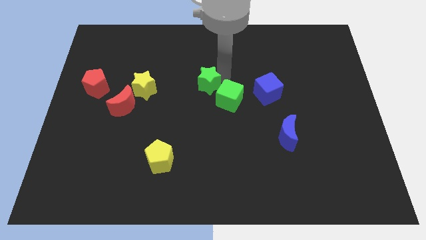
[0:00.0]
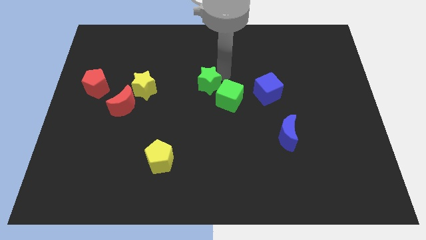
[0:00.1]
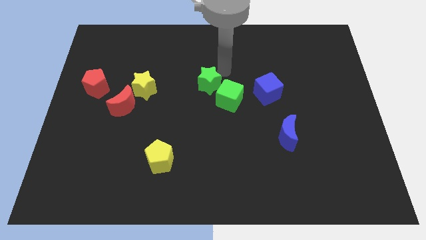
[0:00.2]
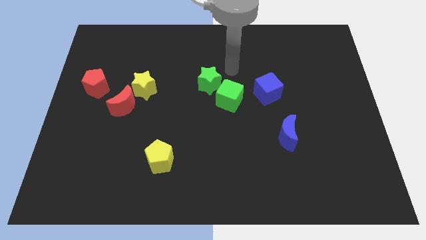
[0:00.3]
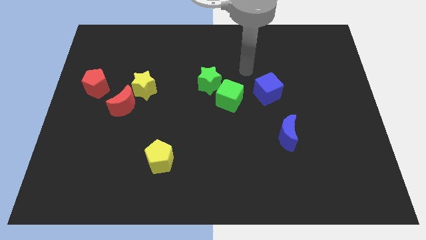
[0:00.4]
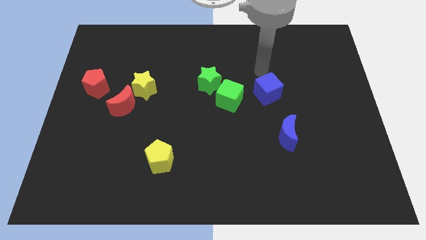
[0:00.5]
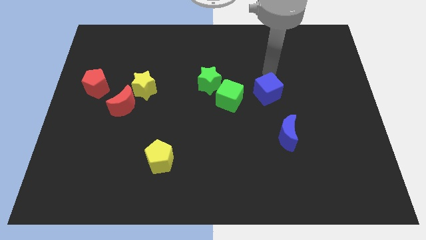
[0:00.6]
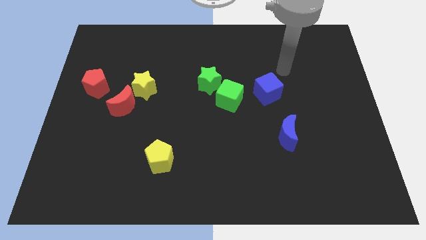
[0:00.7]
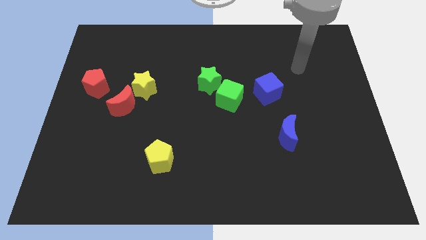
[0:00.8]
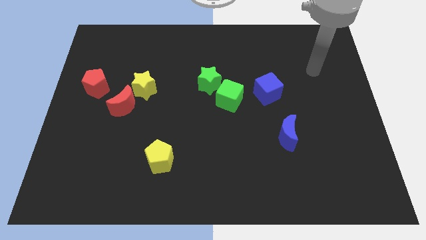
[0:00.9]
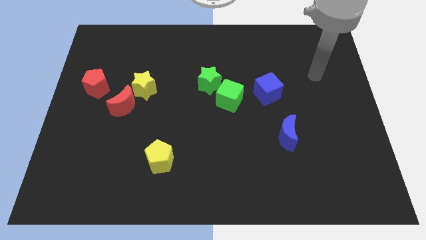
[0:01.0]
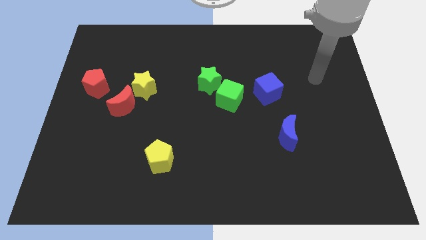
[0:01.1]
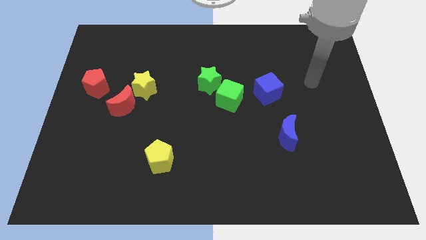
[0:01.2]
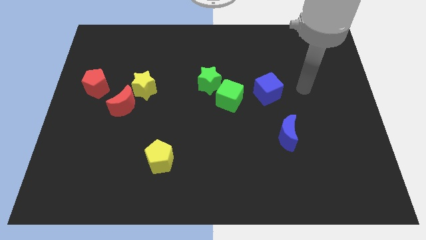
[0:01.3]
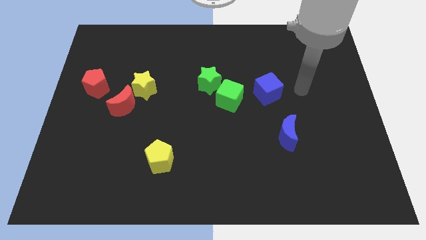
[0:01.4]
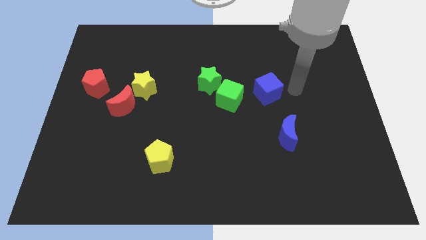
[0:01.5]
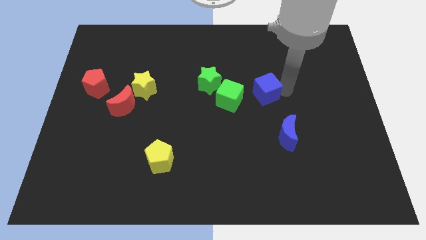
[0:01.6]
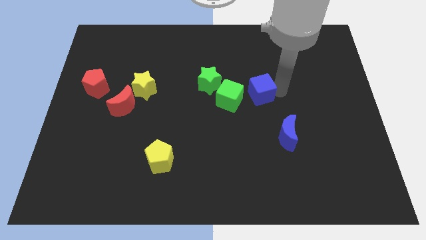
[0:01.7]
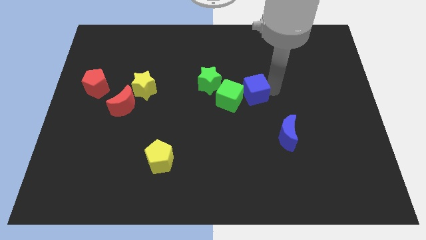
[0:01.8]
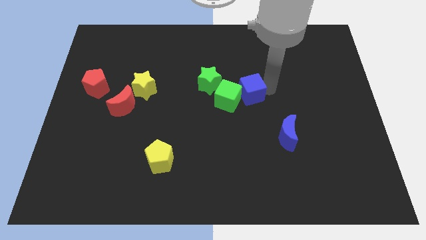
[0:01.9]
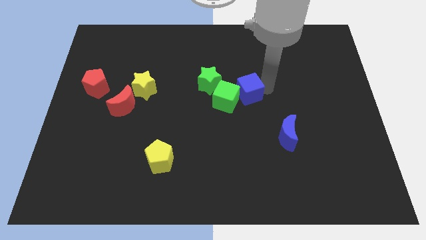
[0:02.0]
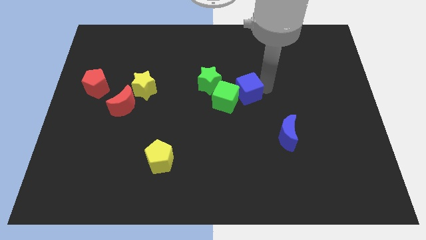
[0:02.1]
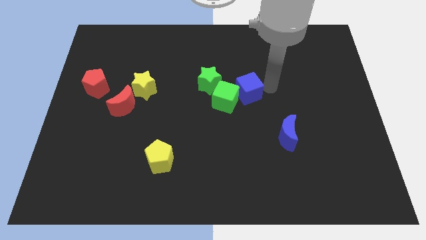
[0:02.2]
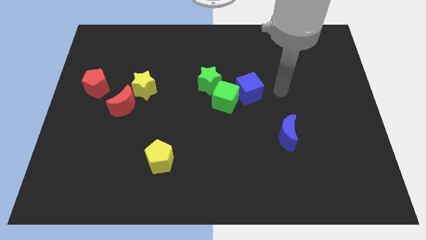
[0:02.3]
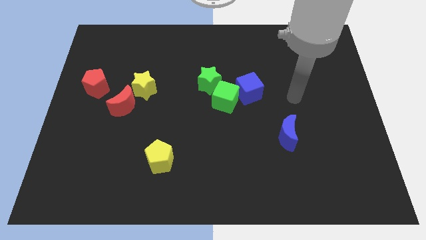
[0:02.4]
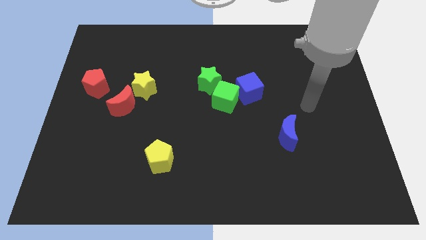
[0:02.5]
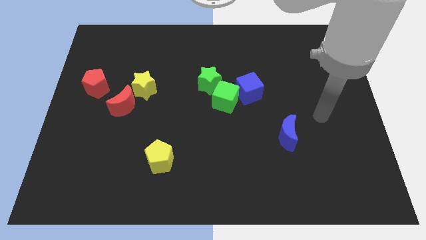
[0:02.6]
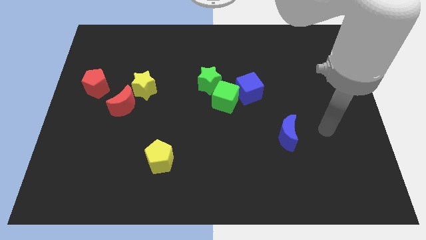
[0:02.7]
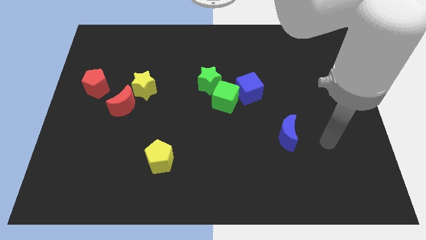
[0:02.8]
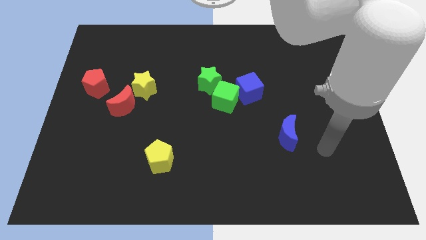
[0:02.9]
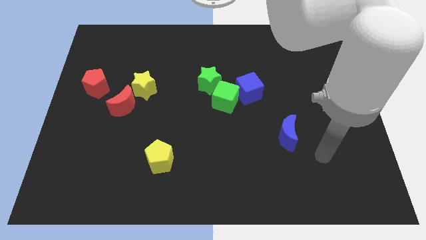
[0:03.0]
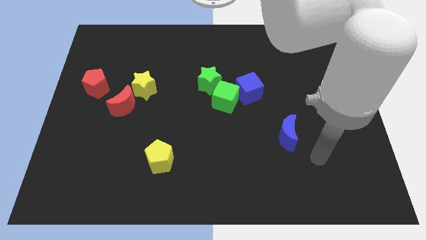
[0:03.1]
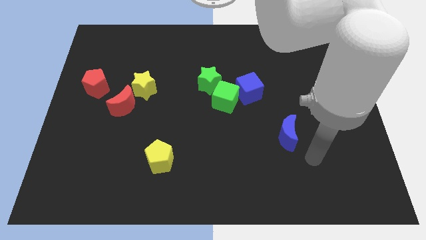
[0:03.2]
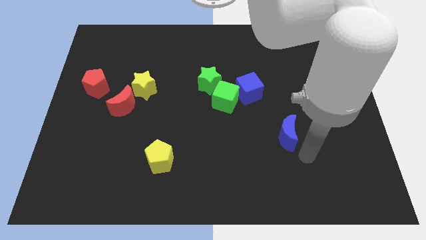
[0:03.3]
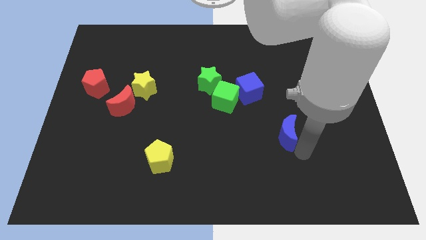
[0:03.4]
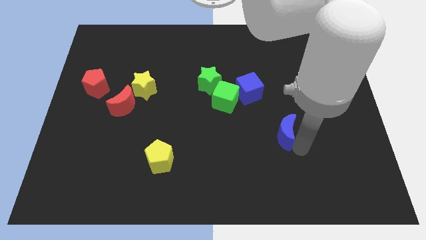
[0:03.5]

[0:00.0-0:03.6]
move blue cube into green cube

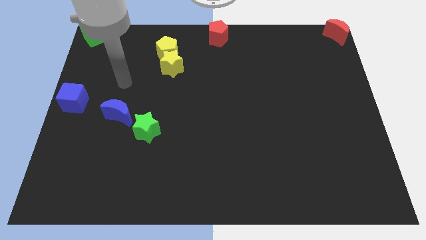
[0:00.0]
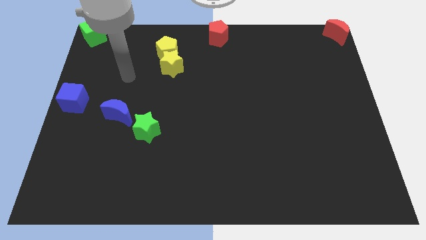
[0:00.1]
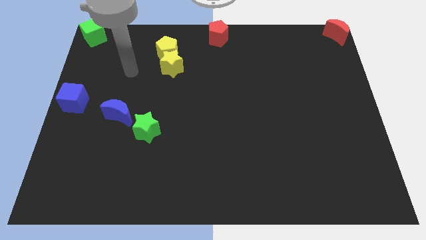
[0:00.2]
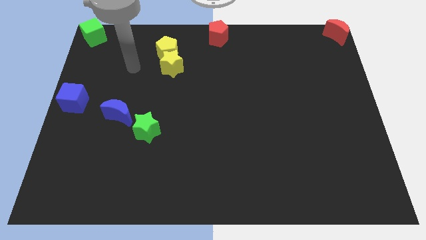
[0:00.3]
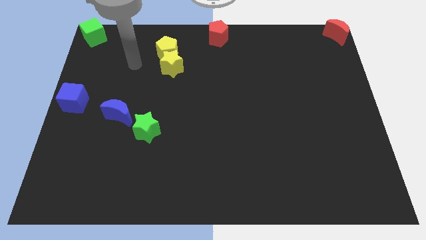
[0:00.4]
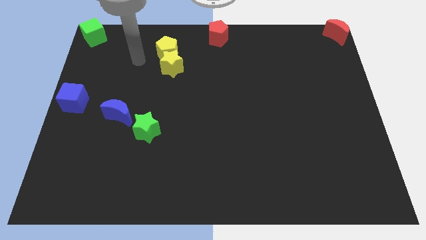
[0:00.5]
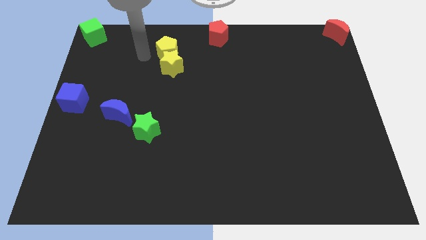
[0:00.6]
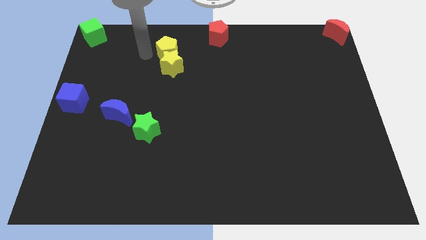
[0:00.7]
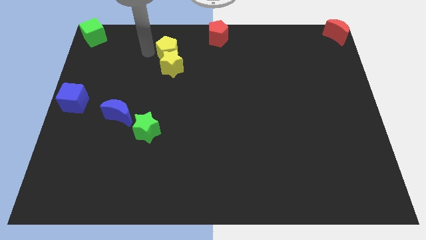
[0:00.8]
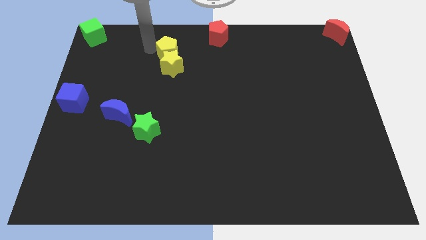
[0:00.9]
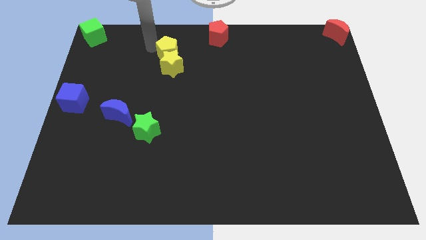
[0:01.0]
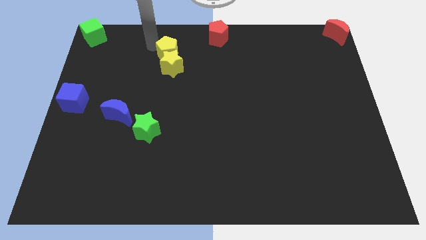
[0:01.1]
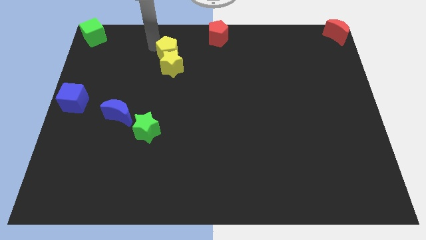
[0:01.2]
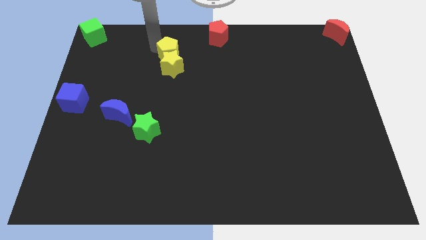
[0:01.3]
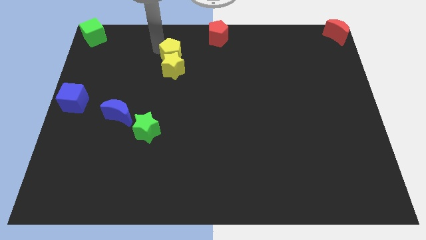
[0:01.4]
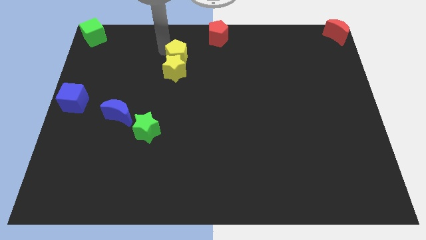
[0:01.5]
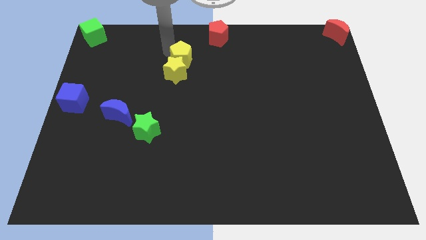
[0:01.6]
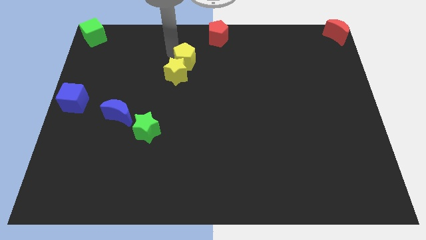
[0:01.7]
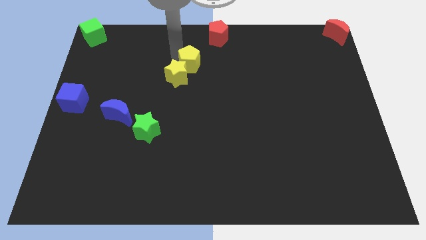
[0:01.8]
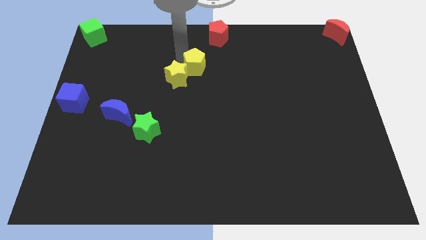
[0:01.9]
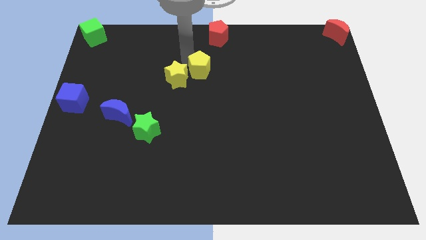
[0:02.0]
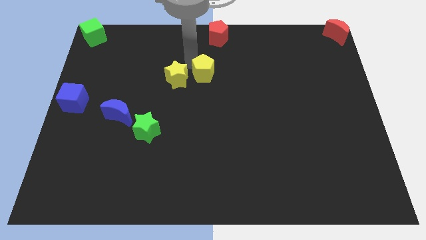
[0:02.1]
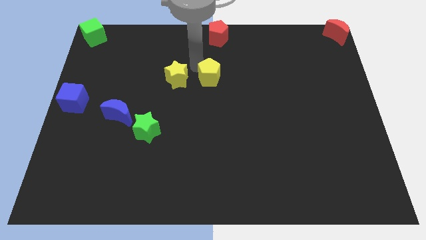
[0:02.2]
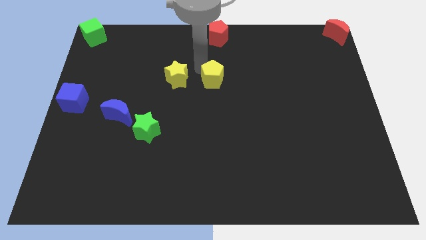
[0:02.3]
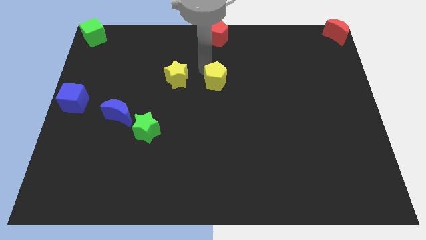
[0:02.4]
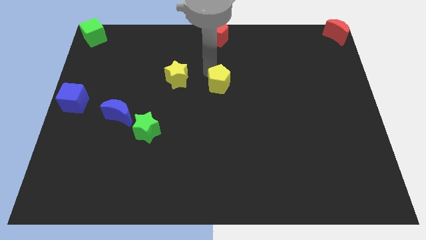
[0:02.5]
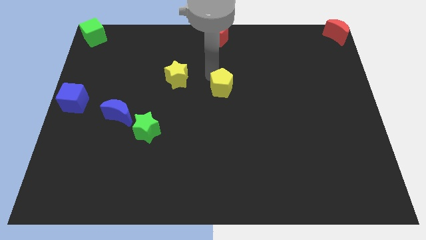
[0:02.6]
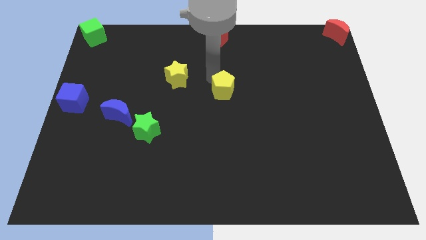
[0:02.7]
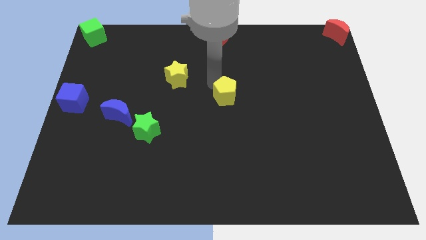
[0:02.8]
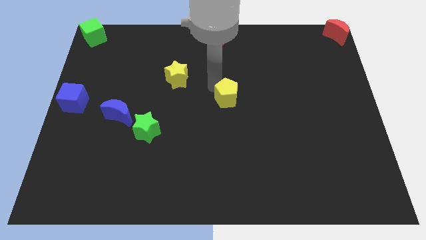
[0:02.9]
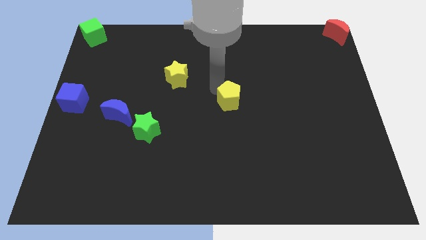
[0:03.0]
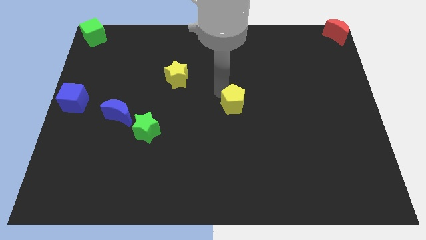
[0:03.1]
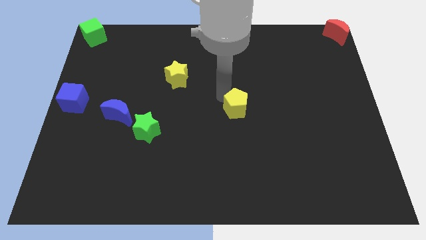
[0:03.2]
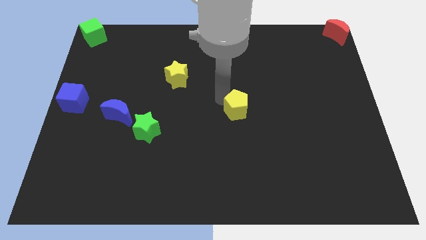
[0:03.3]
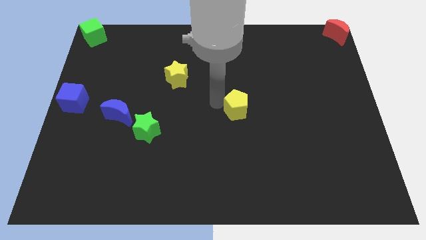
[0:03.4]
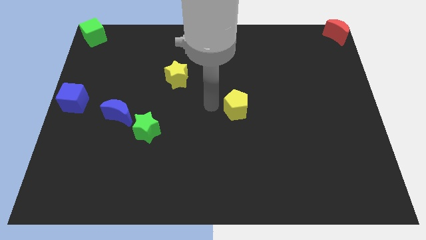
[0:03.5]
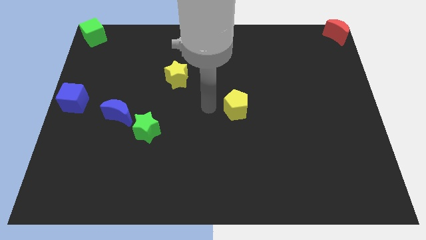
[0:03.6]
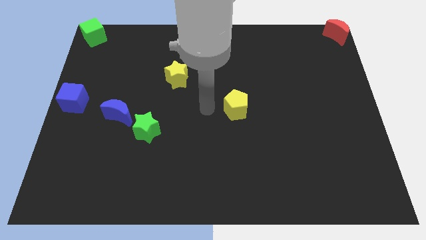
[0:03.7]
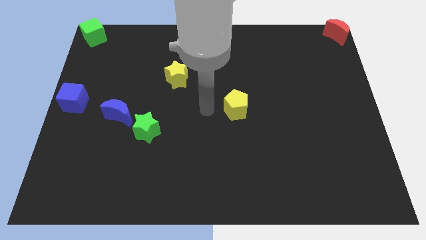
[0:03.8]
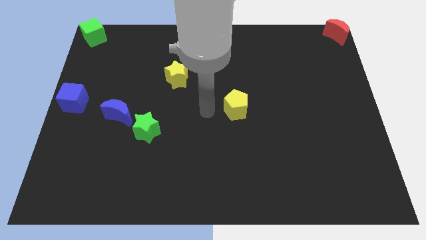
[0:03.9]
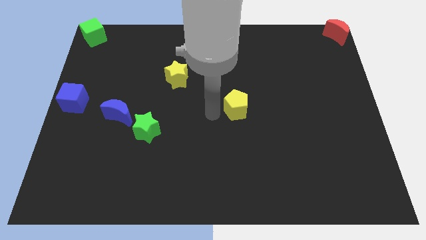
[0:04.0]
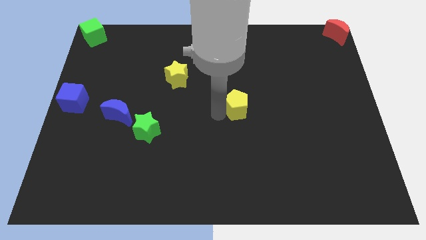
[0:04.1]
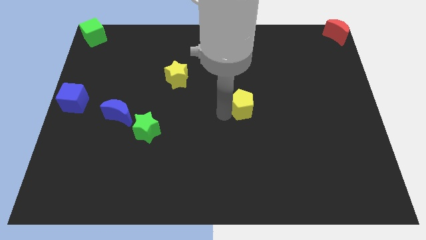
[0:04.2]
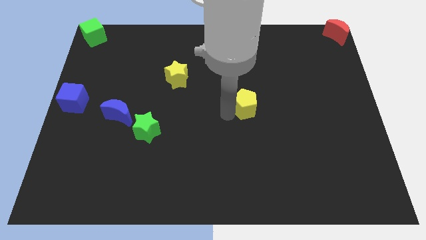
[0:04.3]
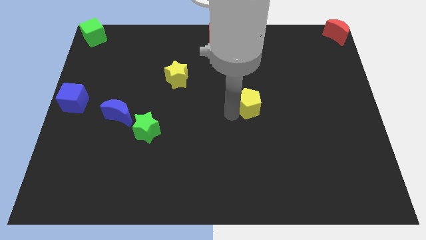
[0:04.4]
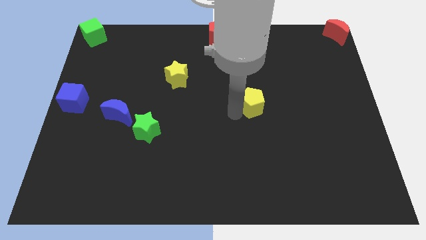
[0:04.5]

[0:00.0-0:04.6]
push the yellow pentagon away from the yellow star

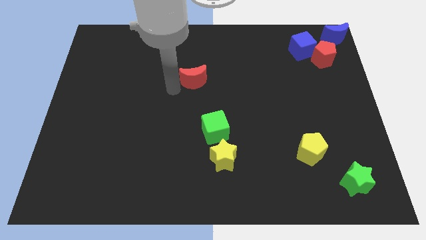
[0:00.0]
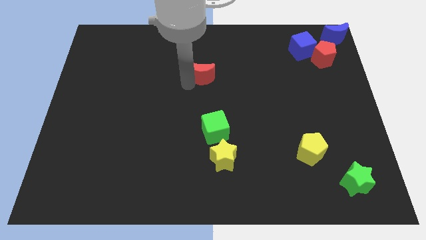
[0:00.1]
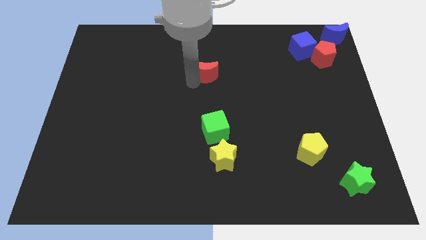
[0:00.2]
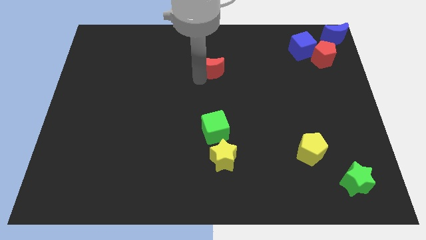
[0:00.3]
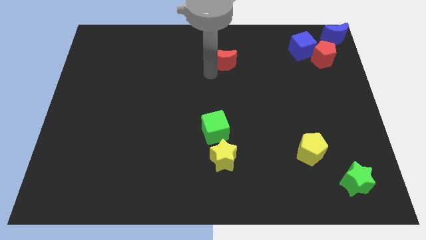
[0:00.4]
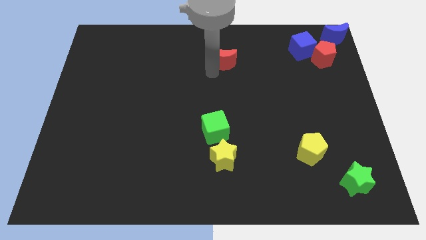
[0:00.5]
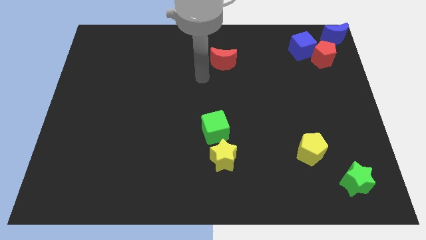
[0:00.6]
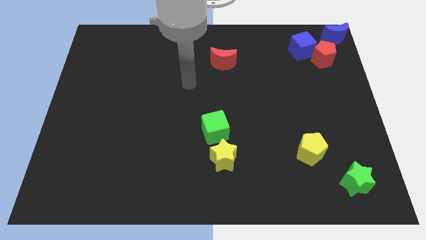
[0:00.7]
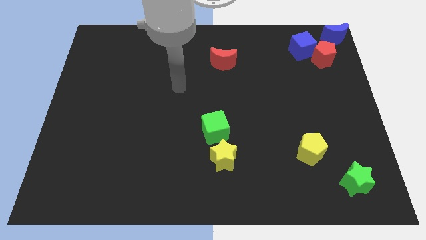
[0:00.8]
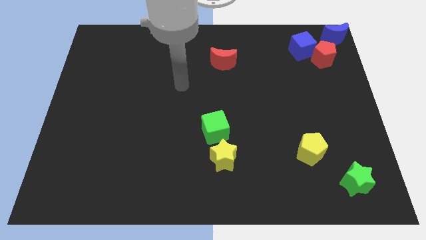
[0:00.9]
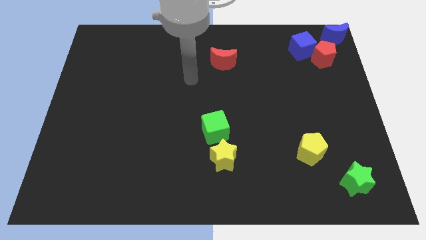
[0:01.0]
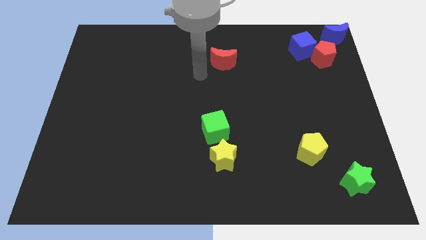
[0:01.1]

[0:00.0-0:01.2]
move the red crescent to the top of the board
